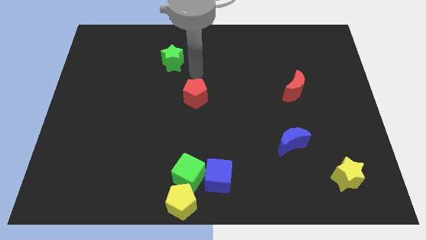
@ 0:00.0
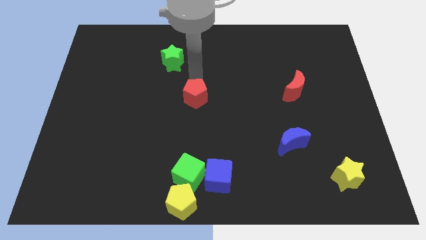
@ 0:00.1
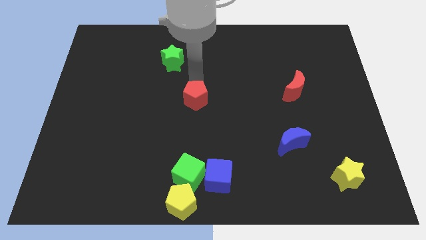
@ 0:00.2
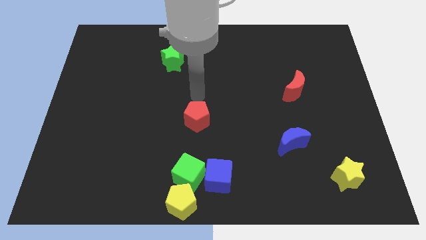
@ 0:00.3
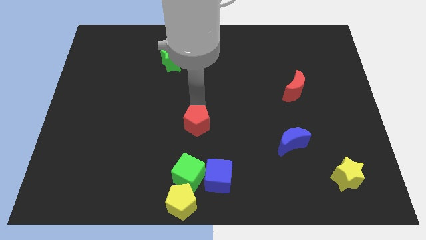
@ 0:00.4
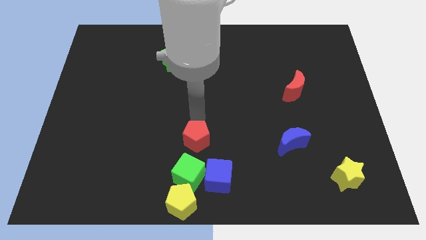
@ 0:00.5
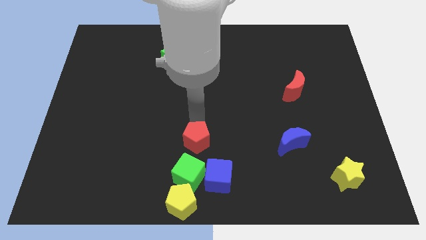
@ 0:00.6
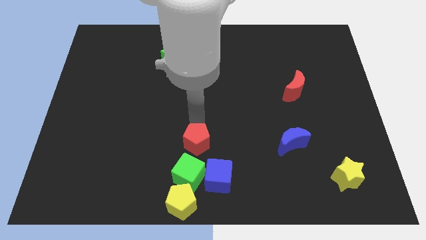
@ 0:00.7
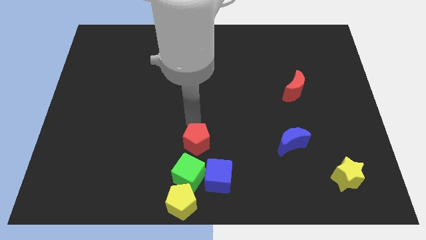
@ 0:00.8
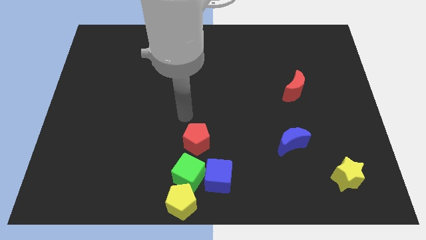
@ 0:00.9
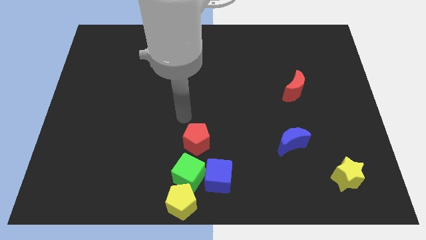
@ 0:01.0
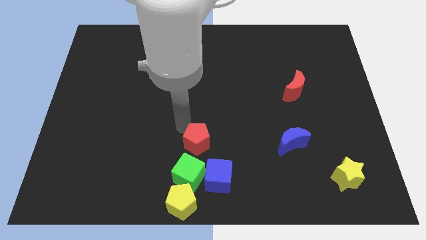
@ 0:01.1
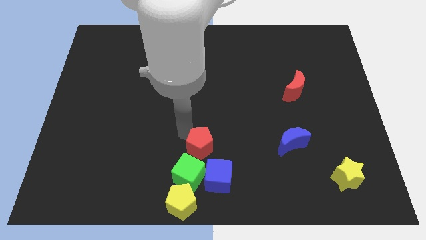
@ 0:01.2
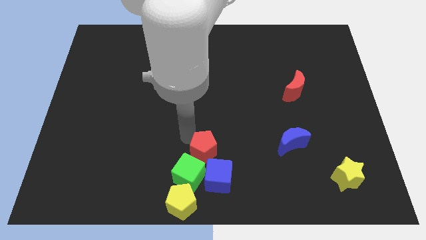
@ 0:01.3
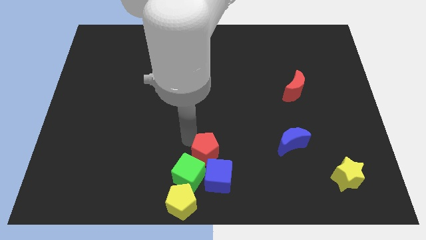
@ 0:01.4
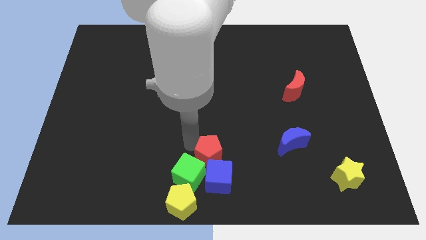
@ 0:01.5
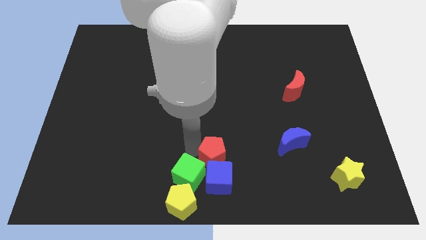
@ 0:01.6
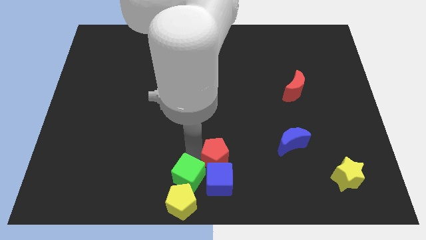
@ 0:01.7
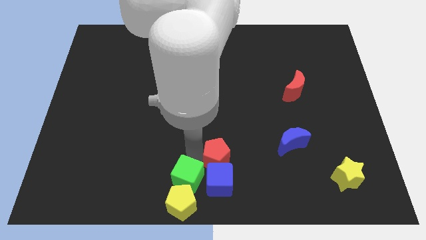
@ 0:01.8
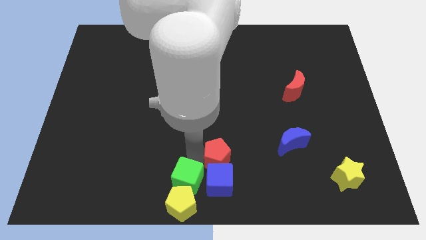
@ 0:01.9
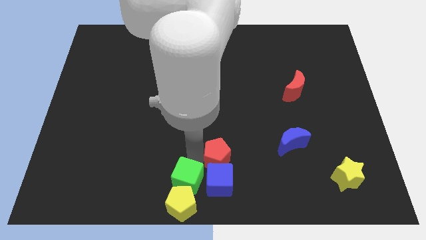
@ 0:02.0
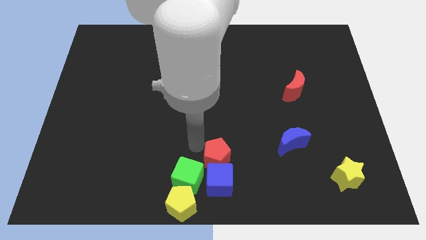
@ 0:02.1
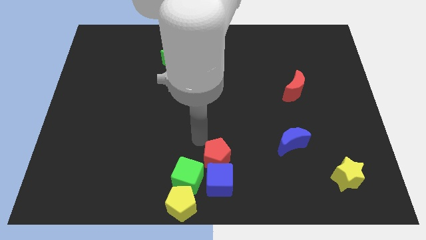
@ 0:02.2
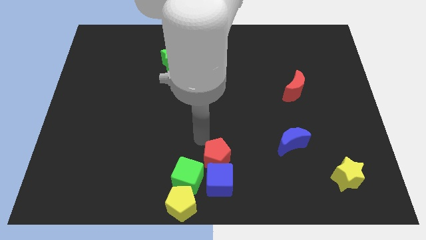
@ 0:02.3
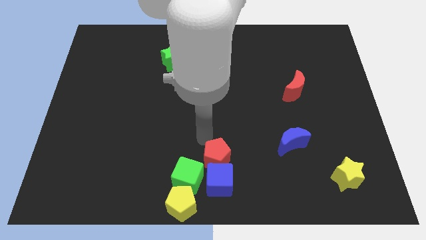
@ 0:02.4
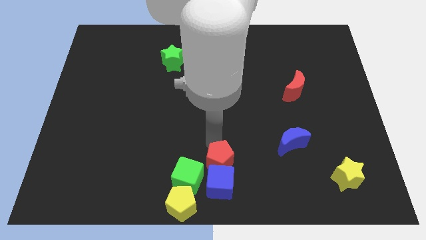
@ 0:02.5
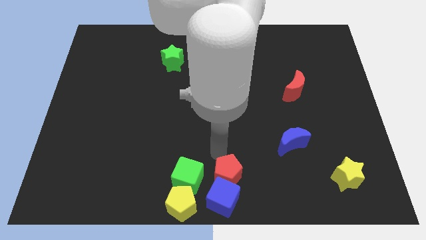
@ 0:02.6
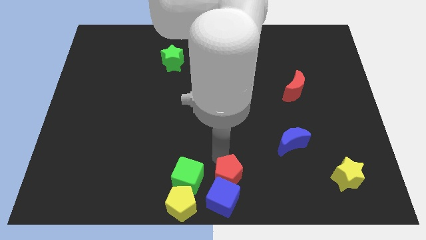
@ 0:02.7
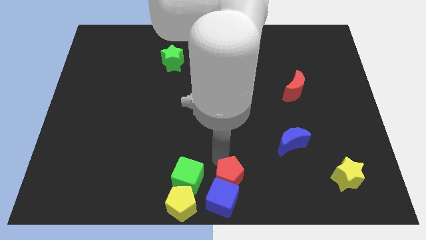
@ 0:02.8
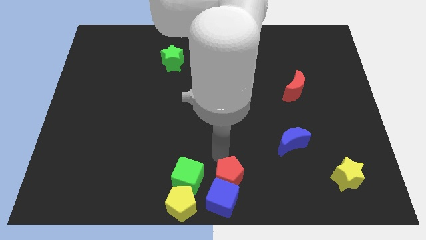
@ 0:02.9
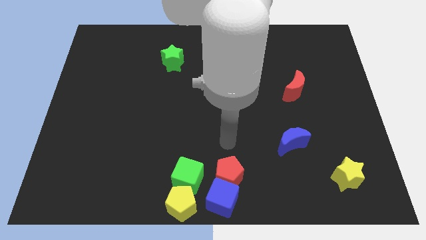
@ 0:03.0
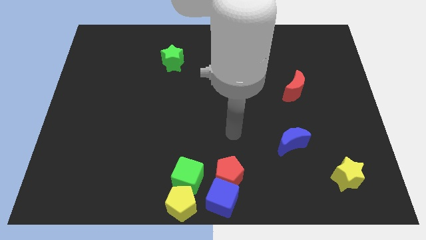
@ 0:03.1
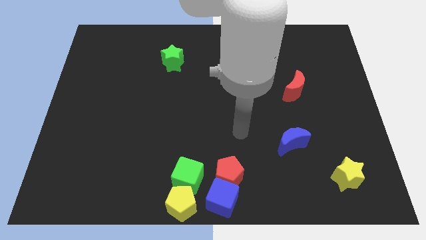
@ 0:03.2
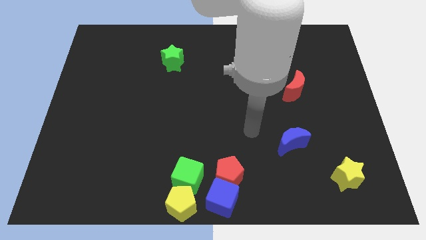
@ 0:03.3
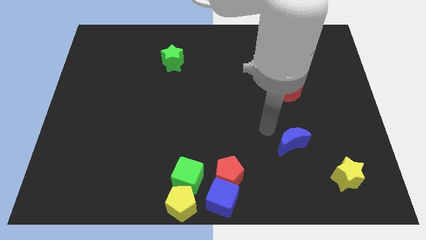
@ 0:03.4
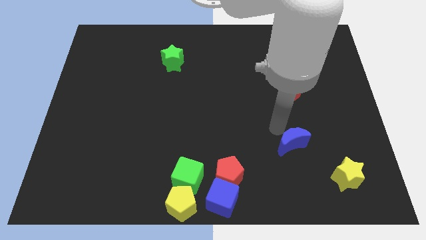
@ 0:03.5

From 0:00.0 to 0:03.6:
push the red pentagon into blue cube

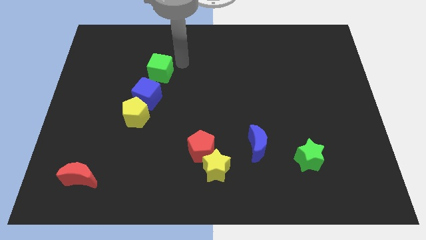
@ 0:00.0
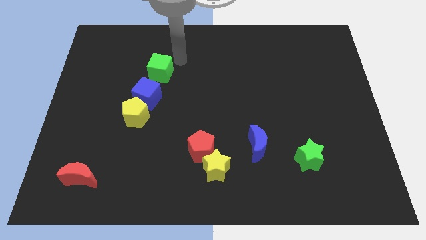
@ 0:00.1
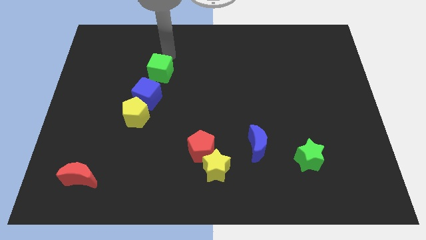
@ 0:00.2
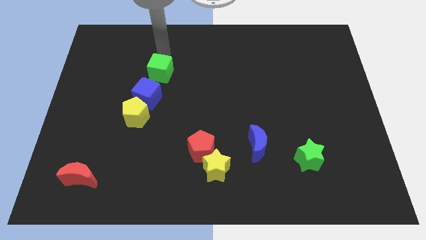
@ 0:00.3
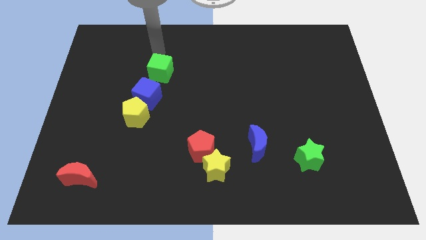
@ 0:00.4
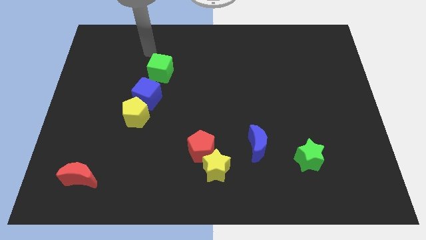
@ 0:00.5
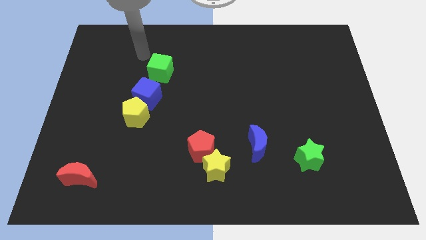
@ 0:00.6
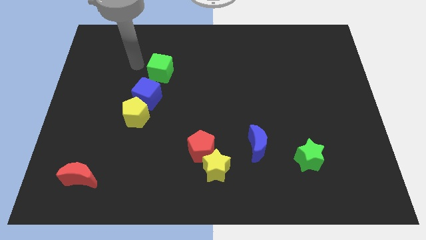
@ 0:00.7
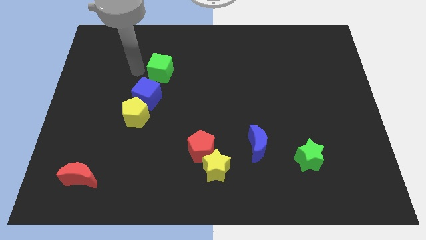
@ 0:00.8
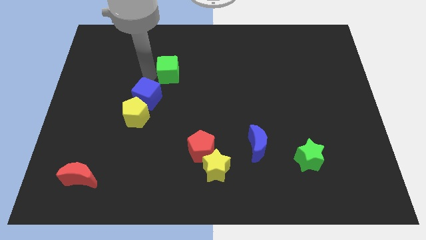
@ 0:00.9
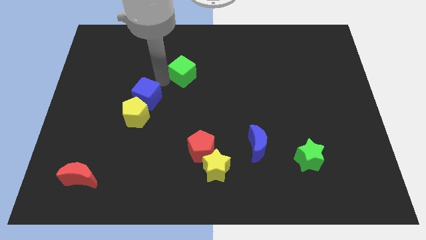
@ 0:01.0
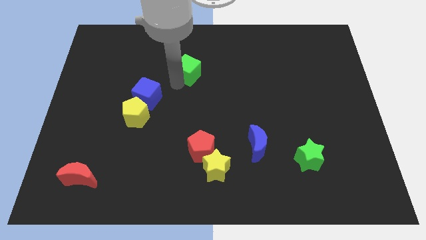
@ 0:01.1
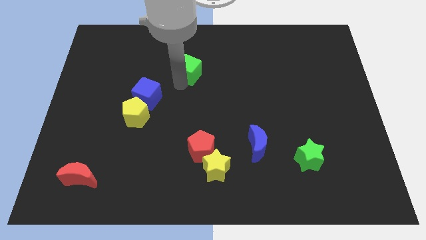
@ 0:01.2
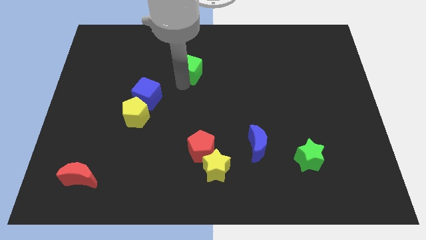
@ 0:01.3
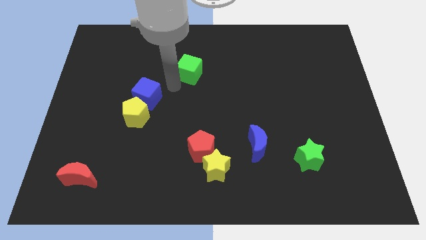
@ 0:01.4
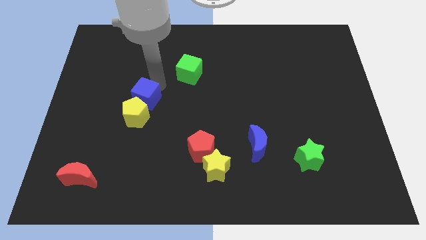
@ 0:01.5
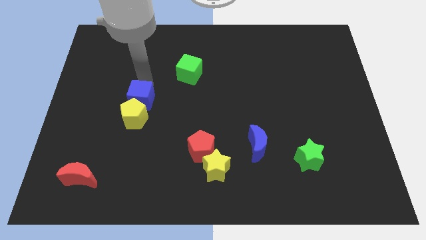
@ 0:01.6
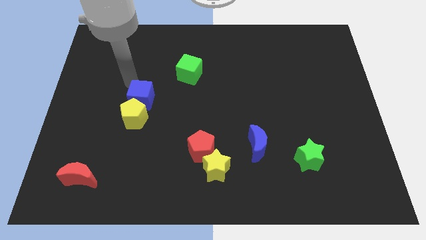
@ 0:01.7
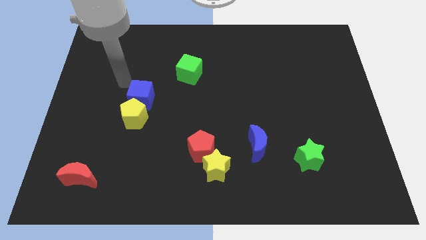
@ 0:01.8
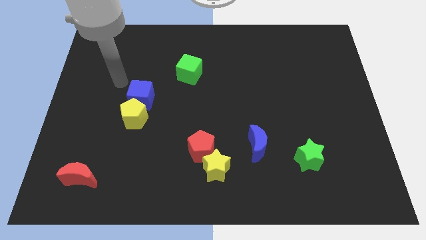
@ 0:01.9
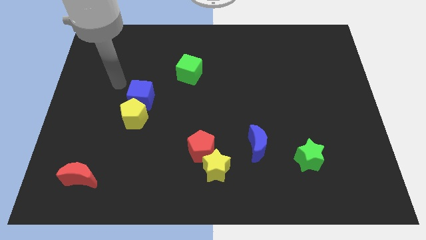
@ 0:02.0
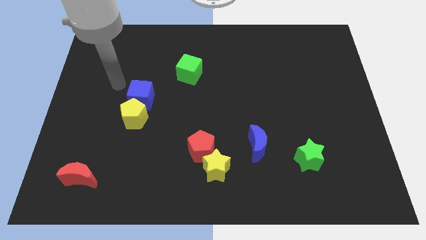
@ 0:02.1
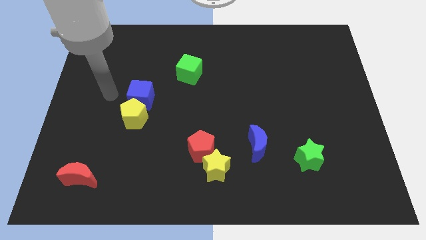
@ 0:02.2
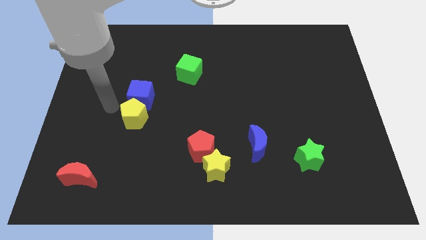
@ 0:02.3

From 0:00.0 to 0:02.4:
move green cube diagonally right above blue cube

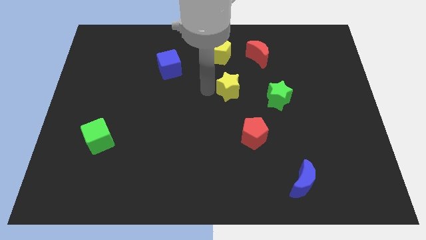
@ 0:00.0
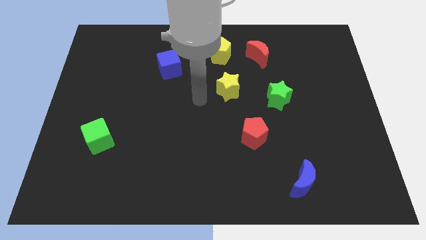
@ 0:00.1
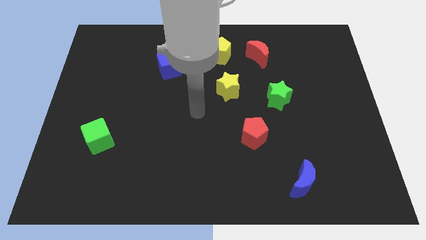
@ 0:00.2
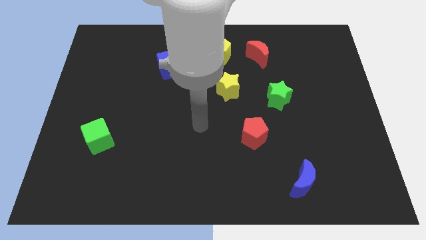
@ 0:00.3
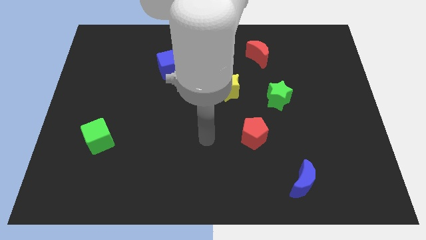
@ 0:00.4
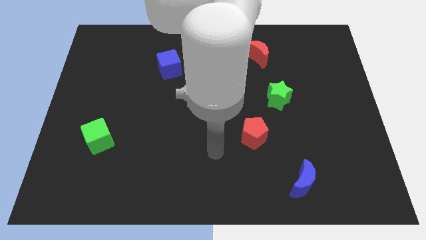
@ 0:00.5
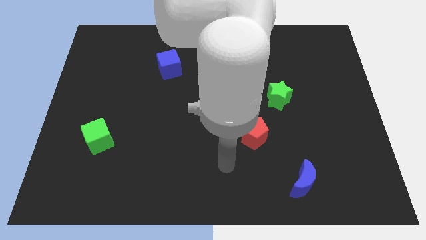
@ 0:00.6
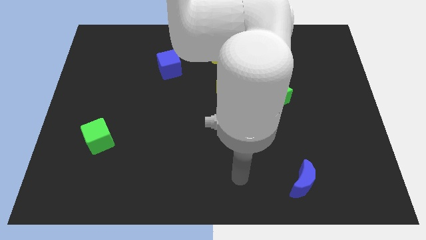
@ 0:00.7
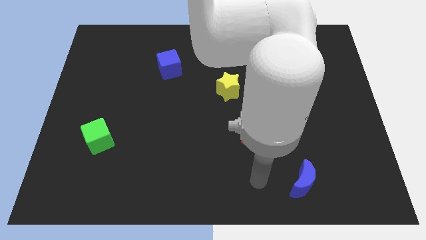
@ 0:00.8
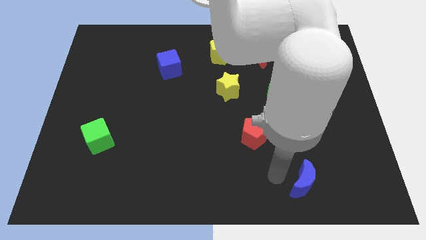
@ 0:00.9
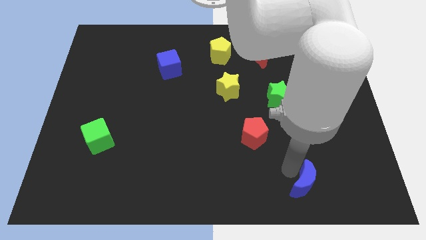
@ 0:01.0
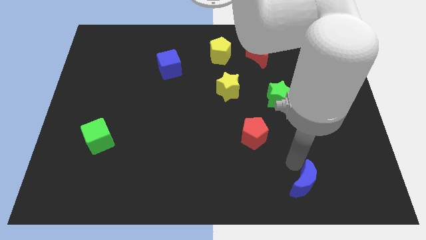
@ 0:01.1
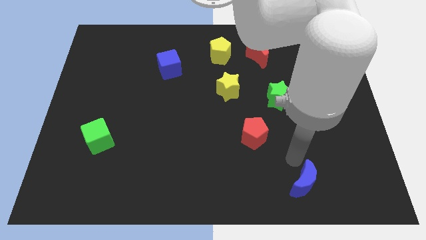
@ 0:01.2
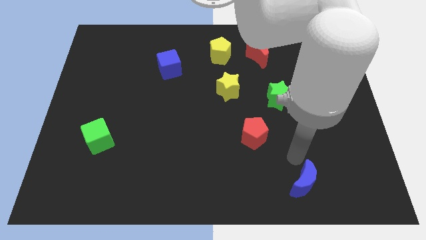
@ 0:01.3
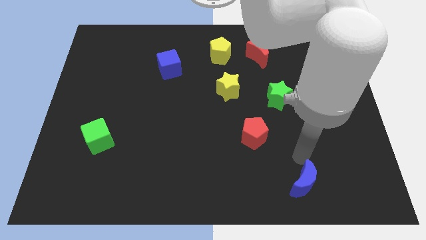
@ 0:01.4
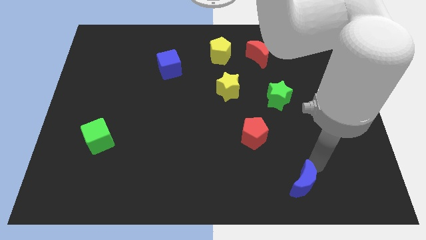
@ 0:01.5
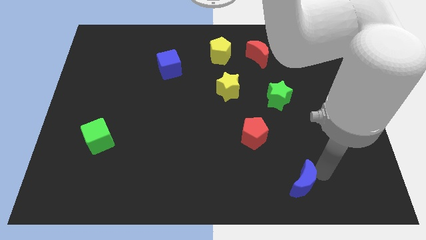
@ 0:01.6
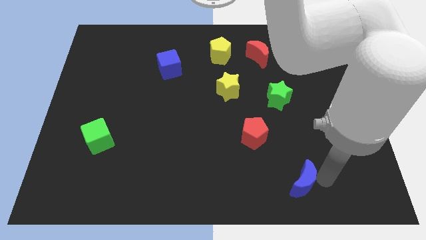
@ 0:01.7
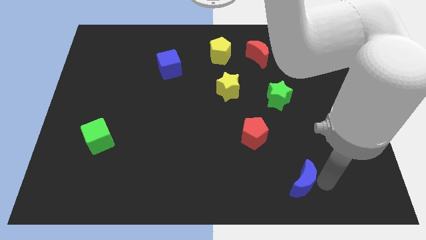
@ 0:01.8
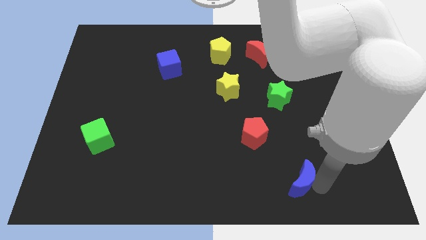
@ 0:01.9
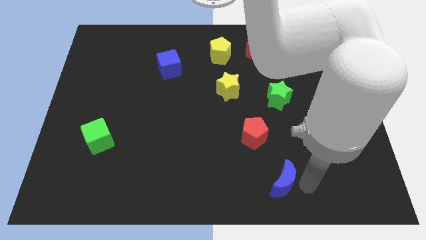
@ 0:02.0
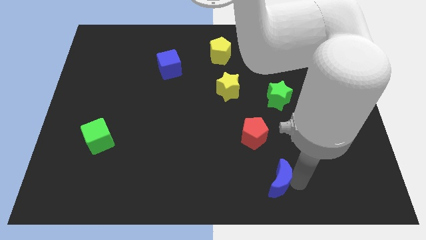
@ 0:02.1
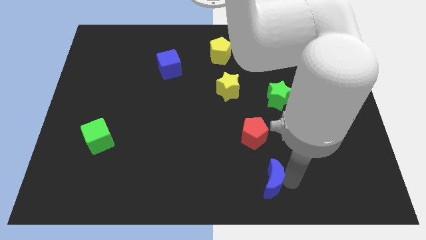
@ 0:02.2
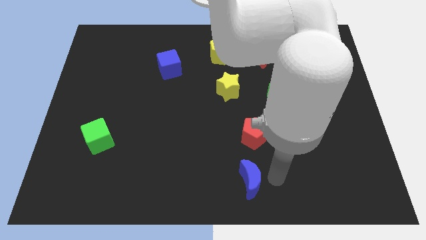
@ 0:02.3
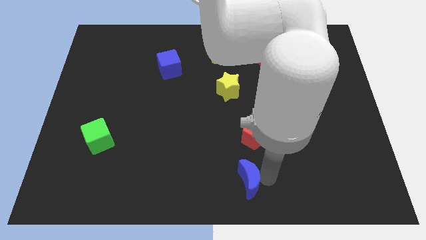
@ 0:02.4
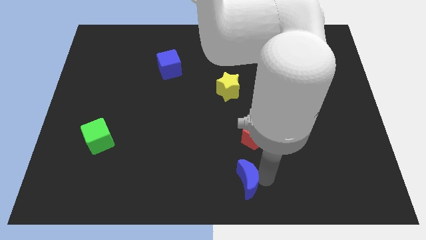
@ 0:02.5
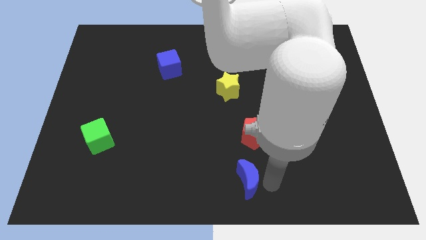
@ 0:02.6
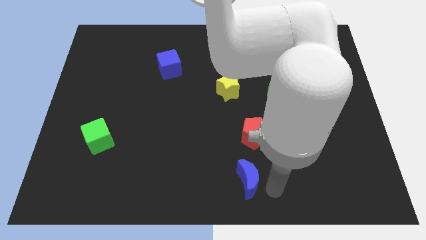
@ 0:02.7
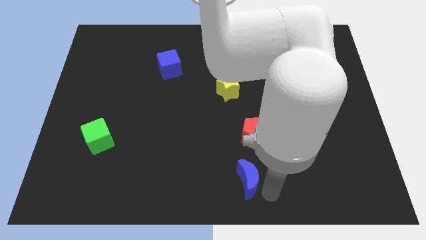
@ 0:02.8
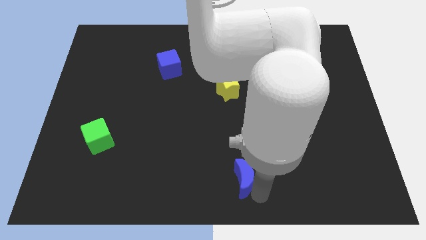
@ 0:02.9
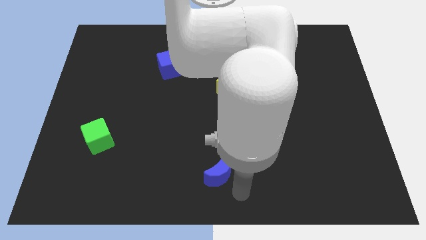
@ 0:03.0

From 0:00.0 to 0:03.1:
move the blue crescent towards the left bottom of the red pentagon
